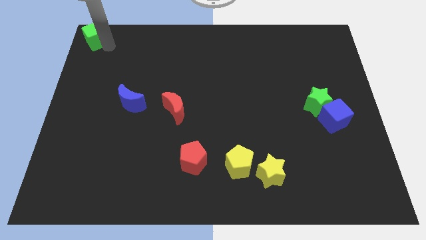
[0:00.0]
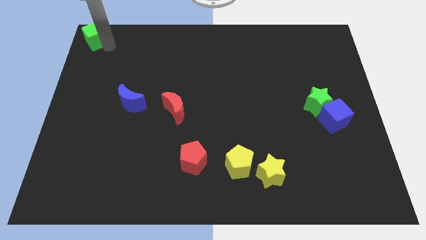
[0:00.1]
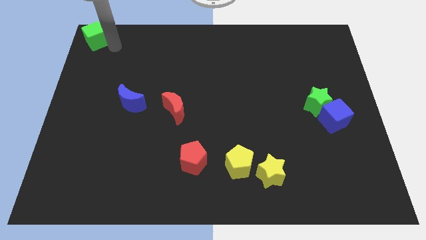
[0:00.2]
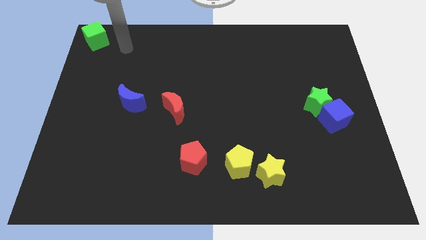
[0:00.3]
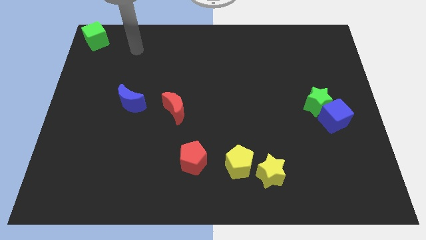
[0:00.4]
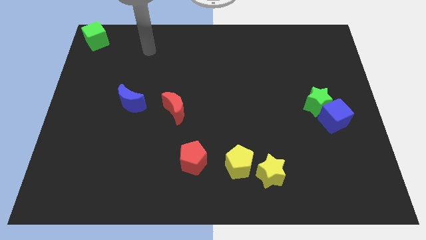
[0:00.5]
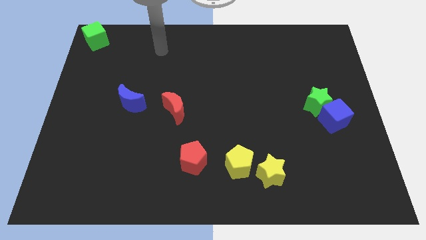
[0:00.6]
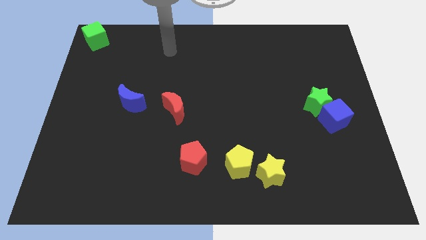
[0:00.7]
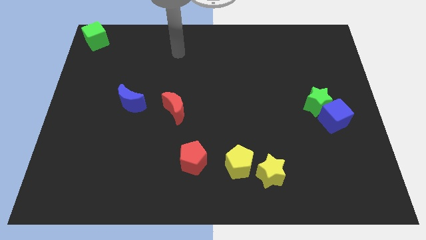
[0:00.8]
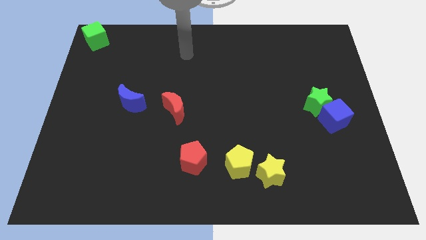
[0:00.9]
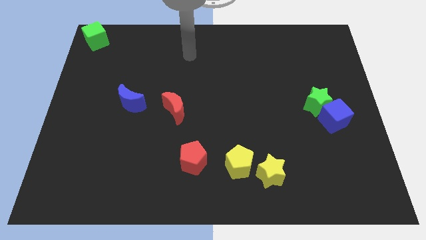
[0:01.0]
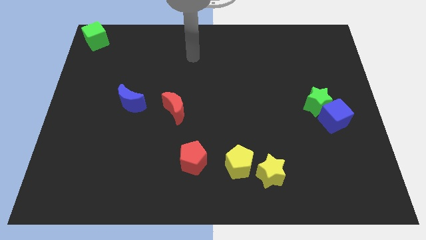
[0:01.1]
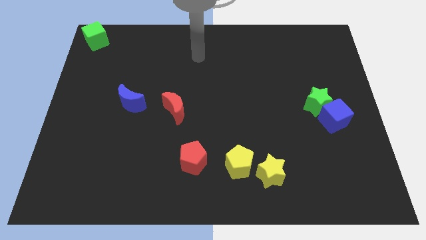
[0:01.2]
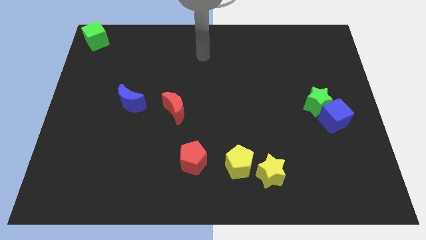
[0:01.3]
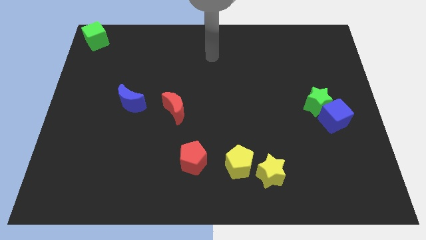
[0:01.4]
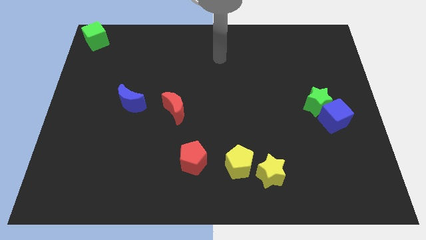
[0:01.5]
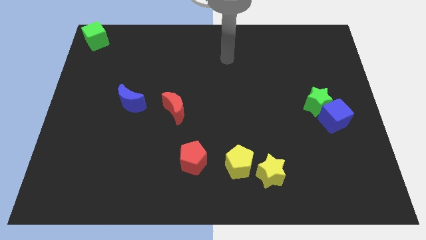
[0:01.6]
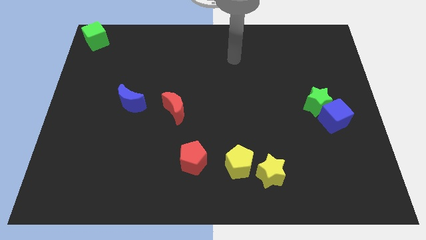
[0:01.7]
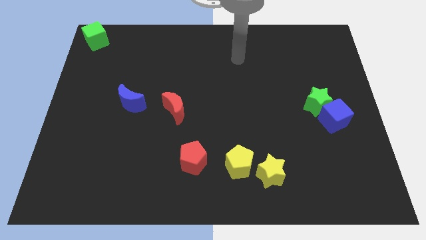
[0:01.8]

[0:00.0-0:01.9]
move the arm away from the green cube

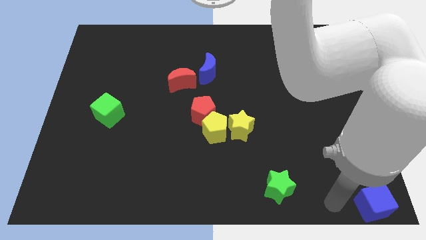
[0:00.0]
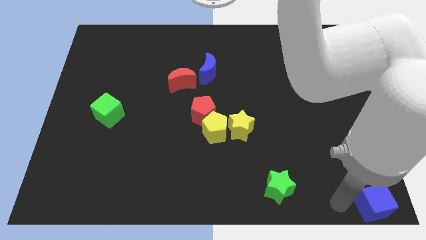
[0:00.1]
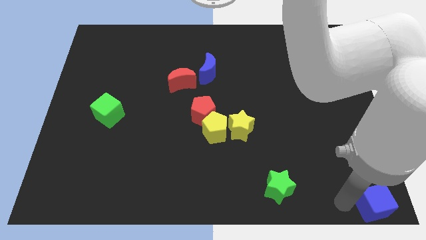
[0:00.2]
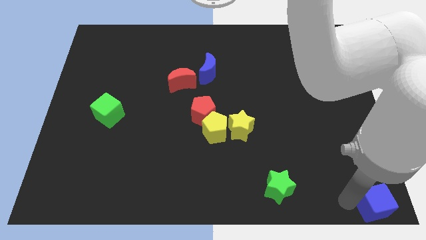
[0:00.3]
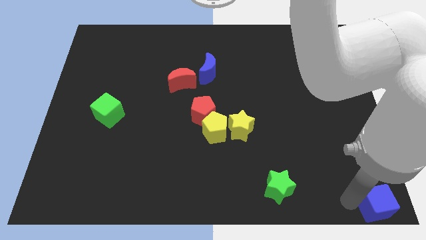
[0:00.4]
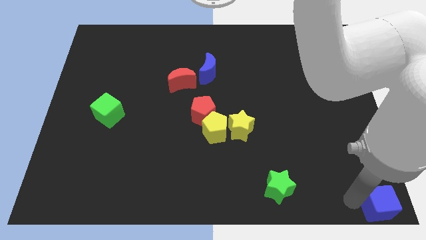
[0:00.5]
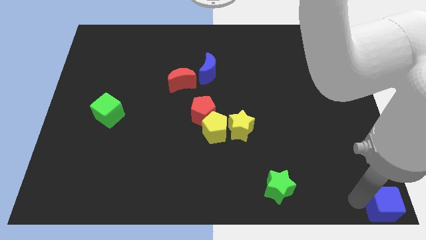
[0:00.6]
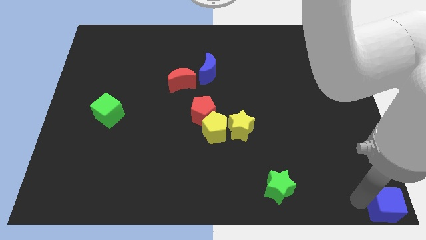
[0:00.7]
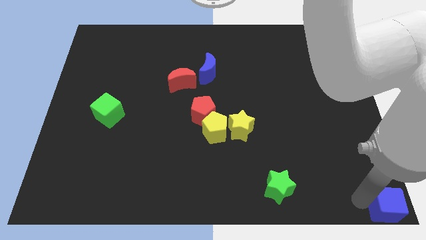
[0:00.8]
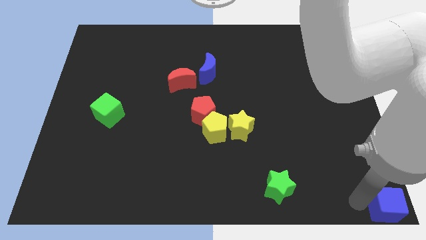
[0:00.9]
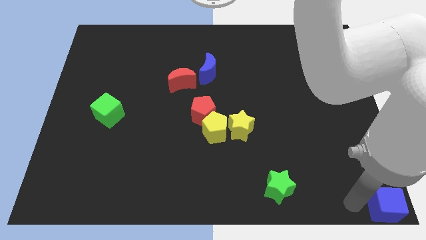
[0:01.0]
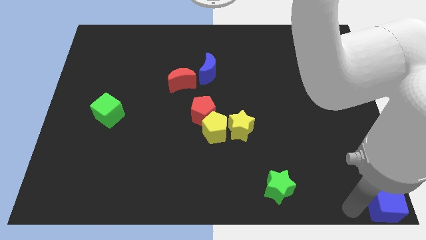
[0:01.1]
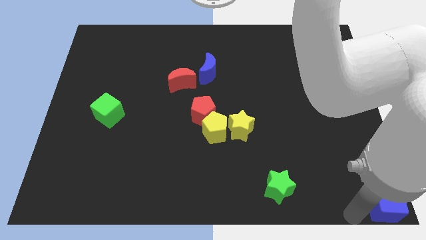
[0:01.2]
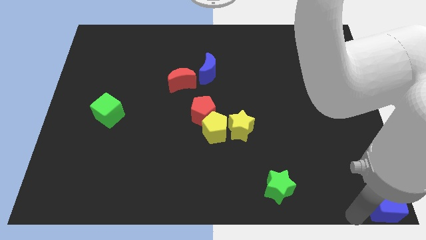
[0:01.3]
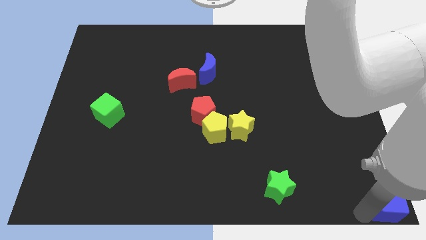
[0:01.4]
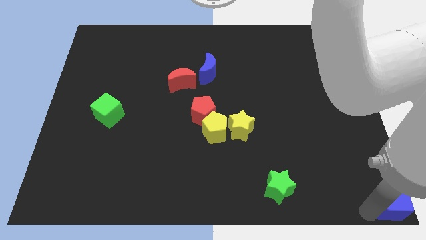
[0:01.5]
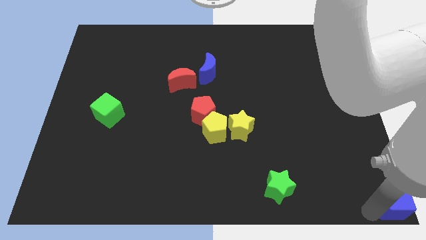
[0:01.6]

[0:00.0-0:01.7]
move blue cube to the right bottom of the board

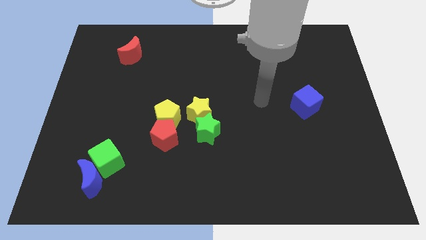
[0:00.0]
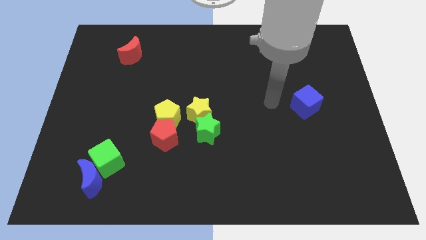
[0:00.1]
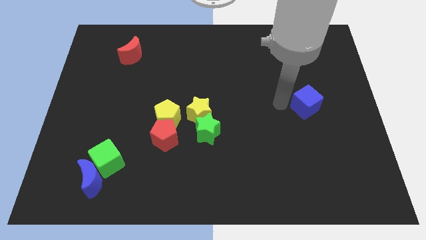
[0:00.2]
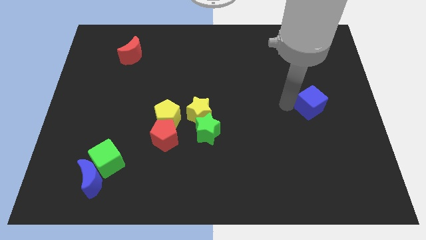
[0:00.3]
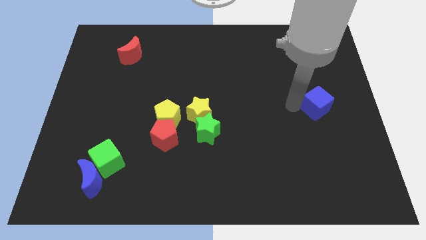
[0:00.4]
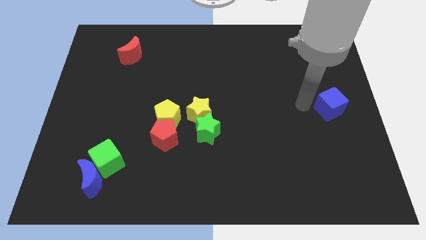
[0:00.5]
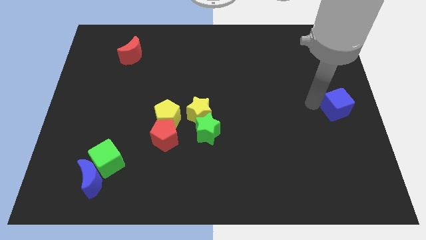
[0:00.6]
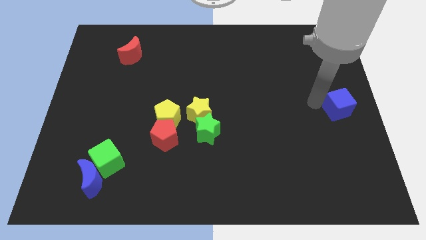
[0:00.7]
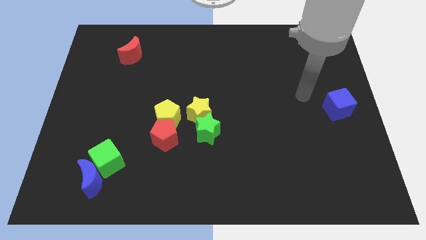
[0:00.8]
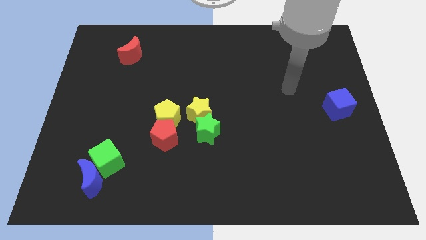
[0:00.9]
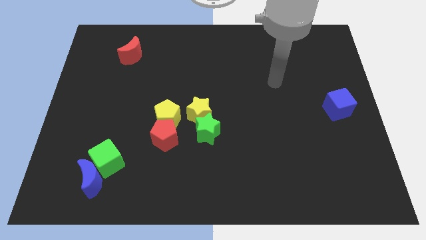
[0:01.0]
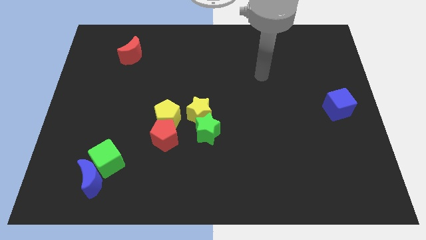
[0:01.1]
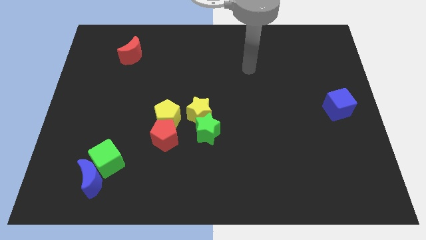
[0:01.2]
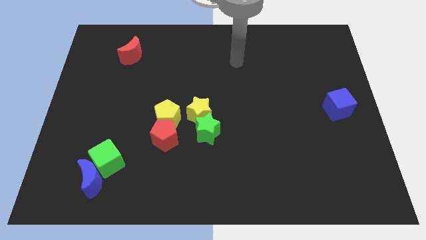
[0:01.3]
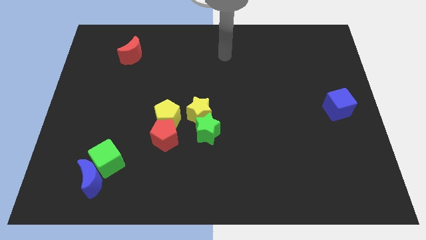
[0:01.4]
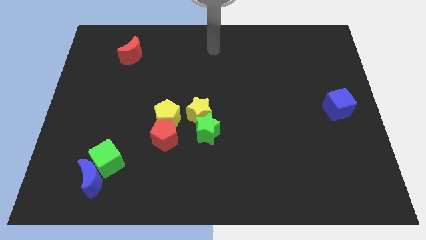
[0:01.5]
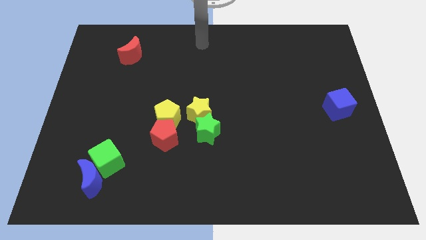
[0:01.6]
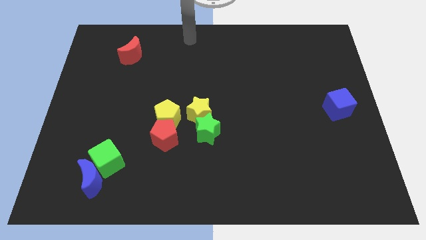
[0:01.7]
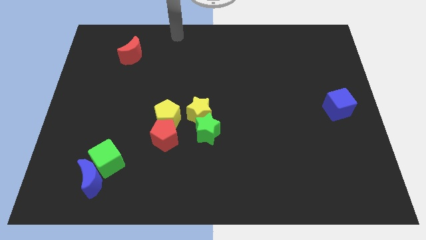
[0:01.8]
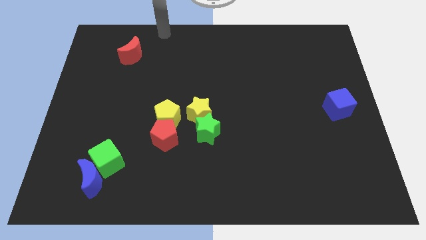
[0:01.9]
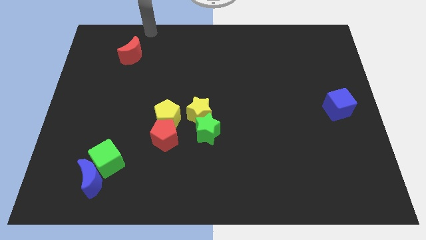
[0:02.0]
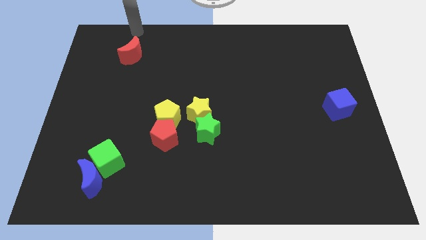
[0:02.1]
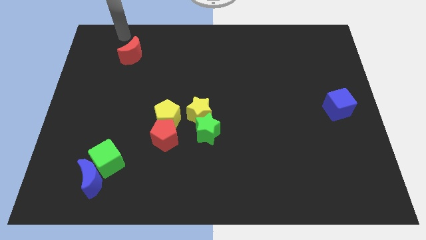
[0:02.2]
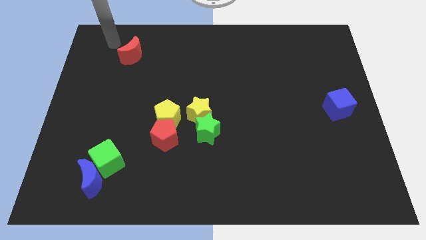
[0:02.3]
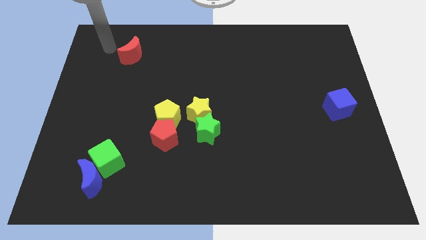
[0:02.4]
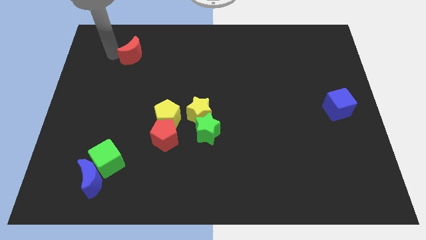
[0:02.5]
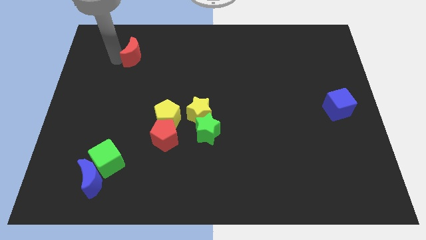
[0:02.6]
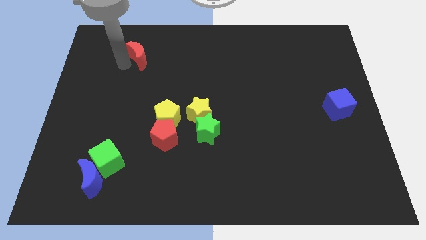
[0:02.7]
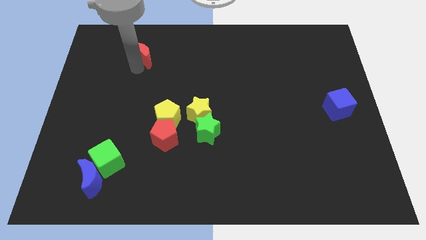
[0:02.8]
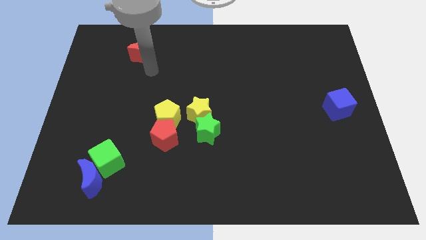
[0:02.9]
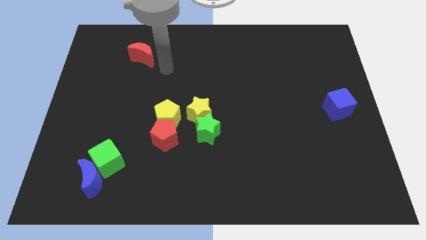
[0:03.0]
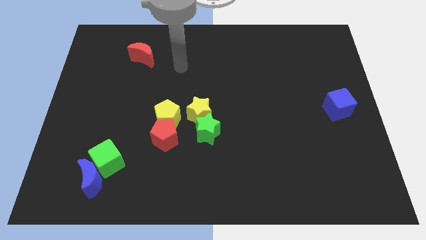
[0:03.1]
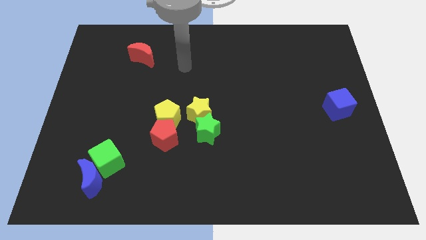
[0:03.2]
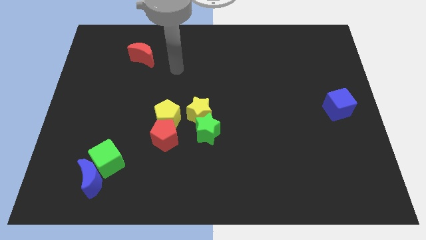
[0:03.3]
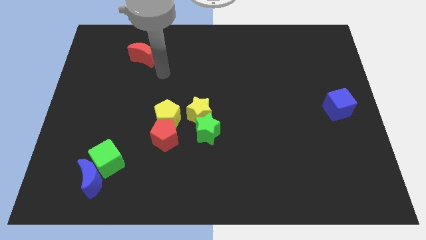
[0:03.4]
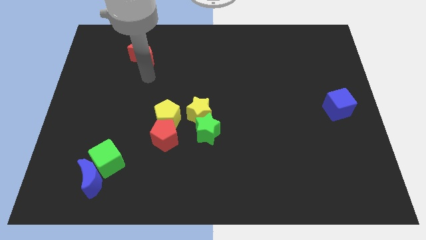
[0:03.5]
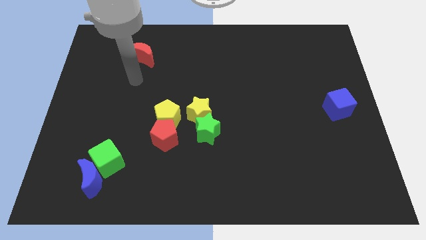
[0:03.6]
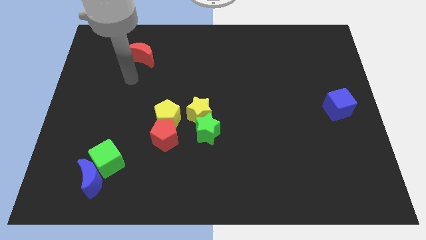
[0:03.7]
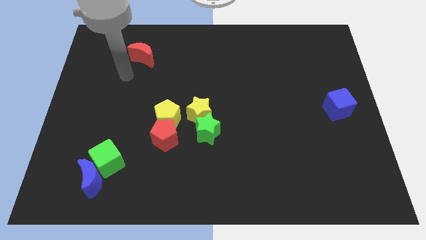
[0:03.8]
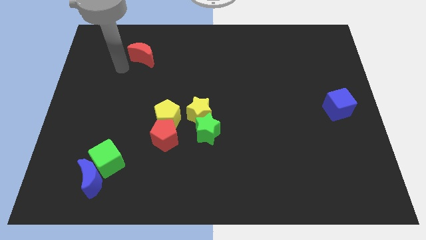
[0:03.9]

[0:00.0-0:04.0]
place the blue cube at the center right of the board

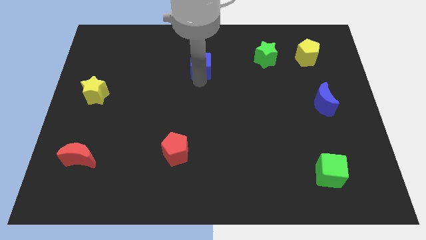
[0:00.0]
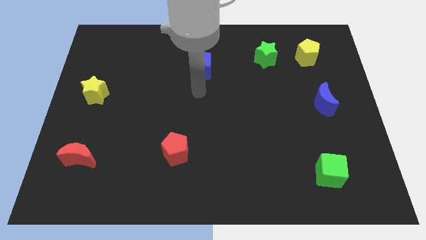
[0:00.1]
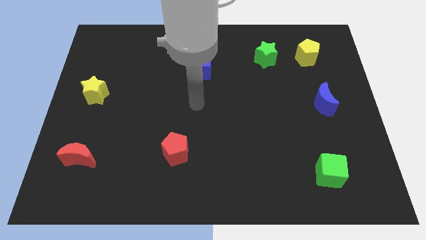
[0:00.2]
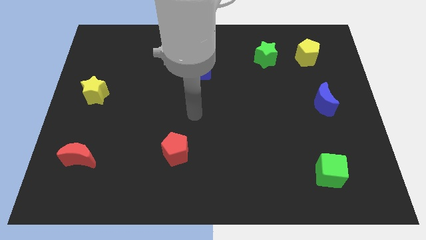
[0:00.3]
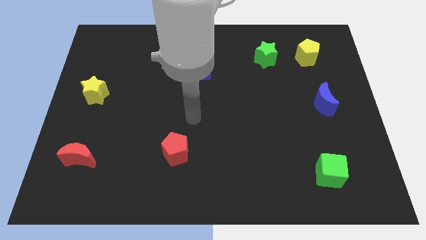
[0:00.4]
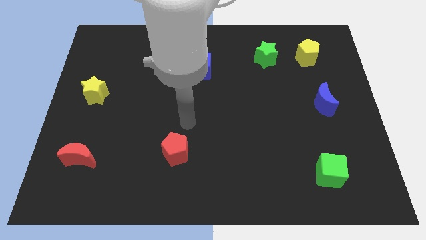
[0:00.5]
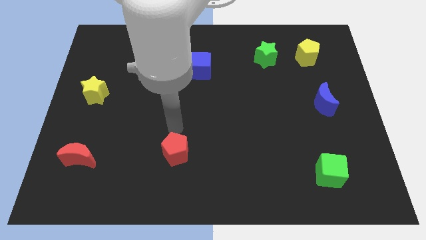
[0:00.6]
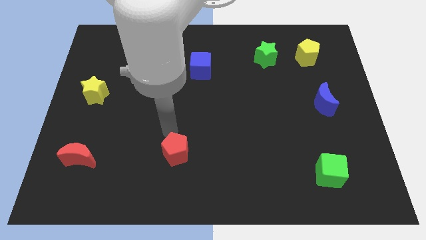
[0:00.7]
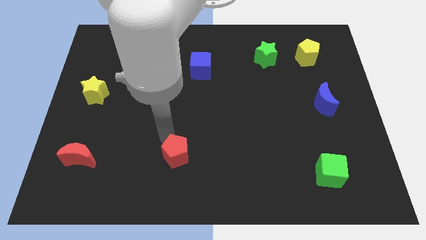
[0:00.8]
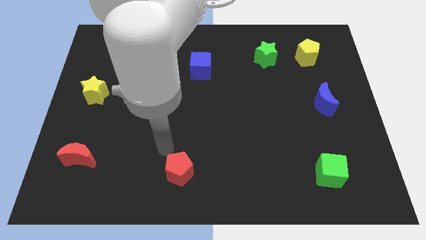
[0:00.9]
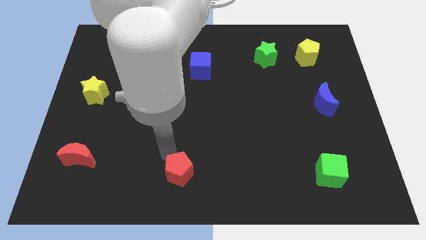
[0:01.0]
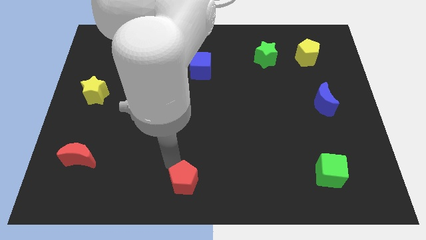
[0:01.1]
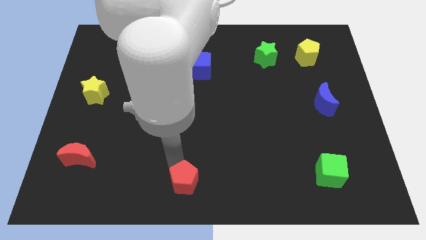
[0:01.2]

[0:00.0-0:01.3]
push the red pentagon slightly to the bottom

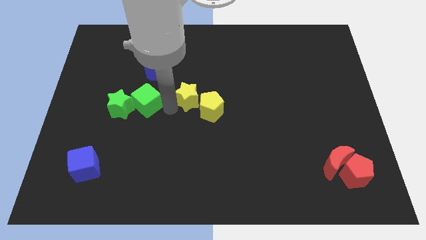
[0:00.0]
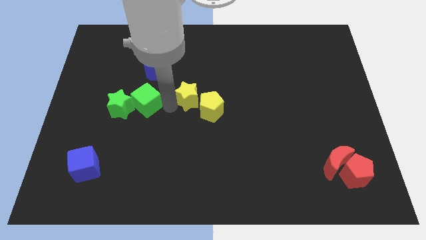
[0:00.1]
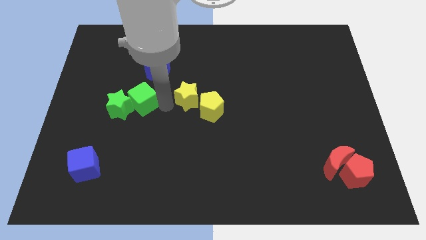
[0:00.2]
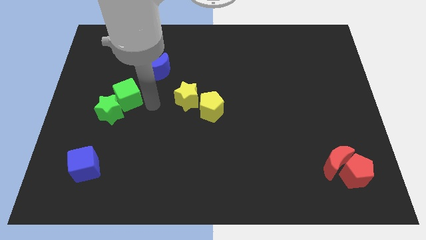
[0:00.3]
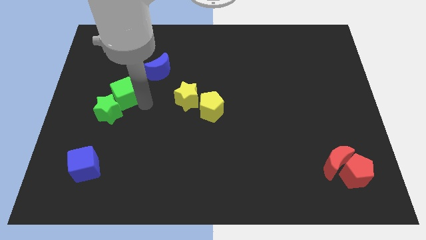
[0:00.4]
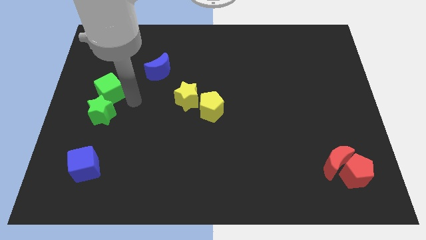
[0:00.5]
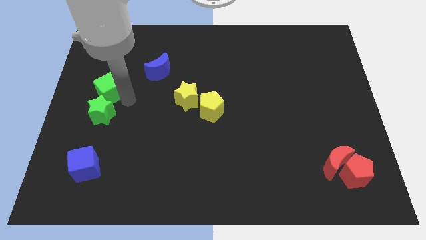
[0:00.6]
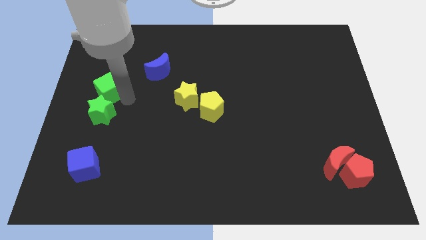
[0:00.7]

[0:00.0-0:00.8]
push the green cube to the top of the green star
